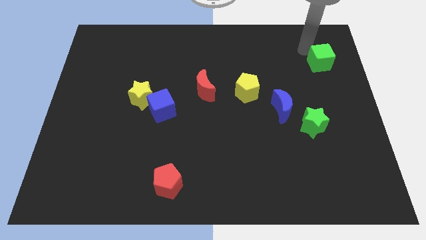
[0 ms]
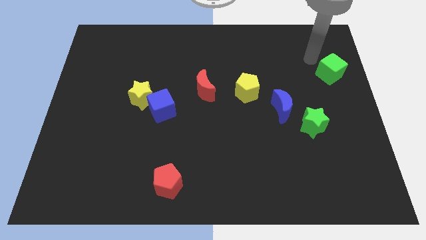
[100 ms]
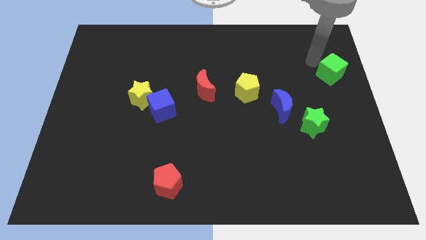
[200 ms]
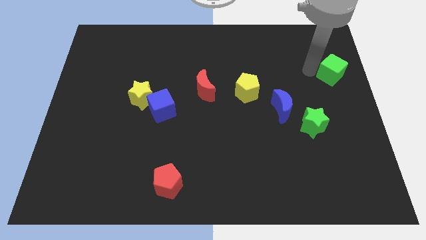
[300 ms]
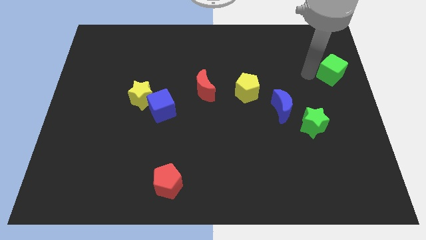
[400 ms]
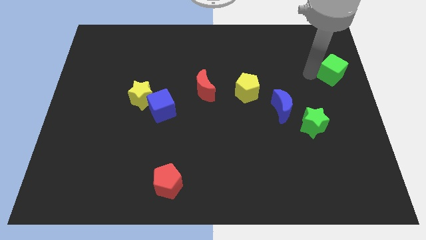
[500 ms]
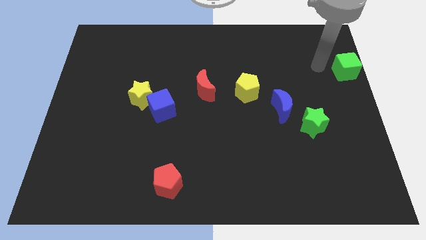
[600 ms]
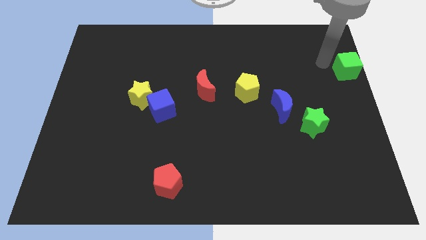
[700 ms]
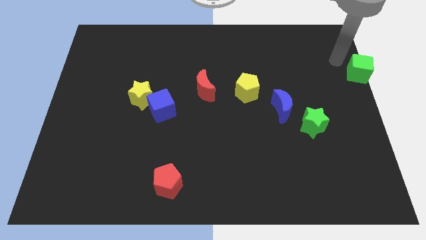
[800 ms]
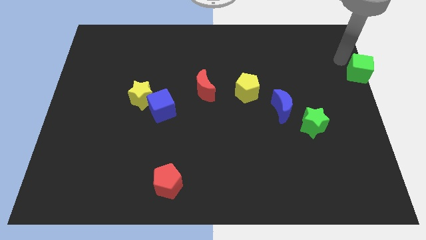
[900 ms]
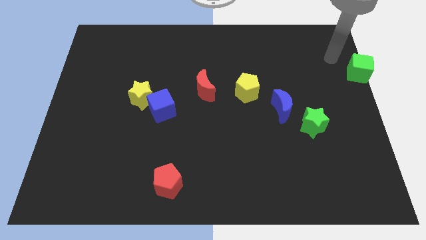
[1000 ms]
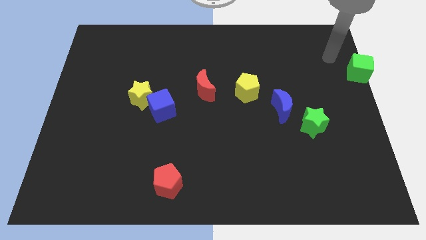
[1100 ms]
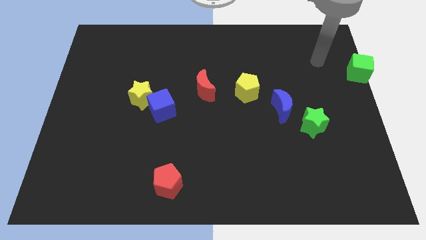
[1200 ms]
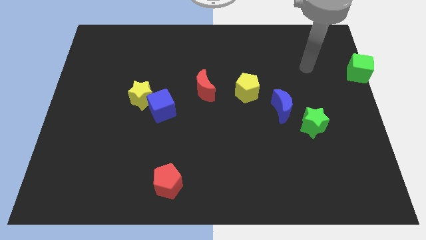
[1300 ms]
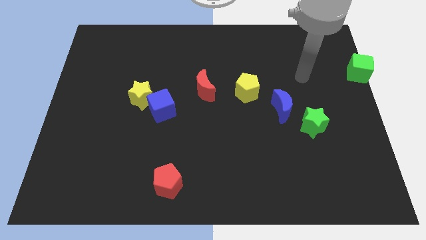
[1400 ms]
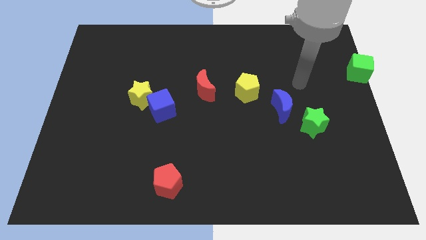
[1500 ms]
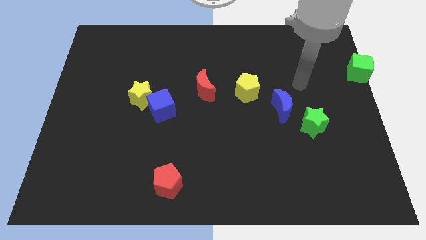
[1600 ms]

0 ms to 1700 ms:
move the green cube towards the right side of the board

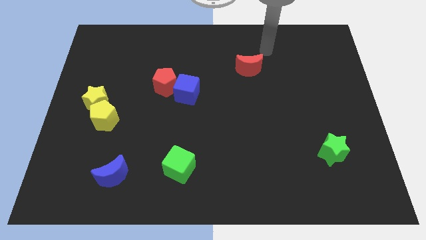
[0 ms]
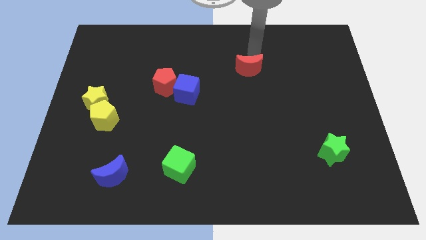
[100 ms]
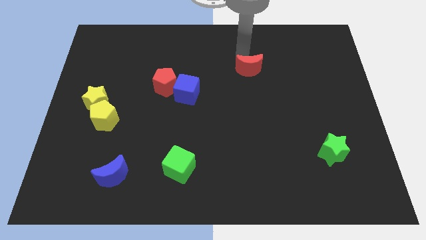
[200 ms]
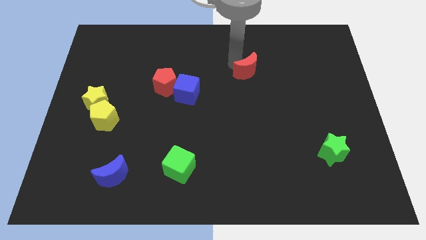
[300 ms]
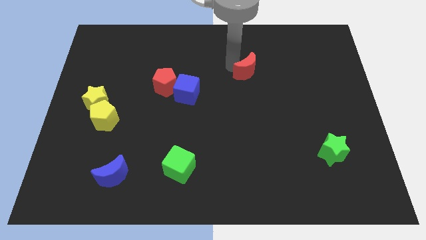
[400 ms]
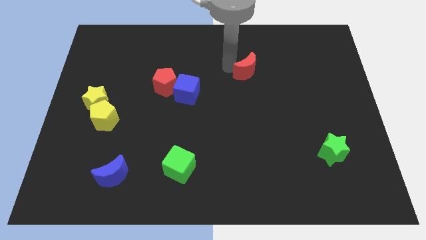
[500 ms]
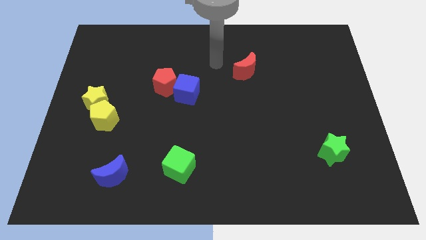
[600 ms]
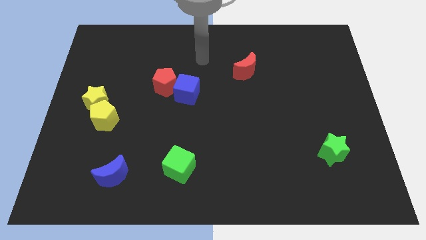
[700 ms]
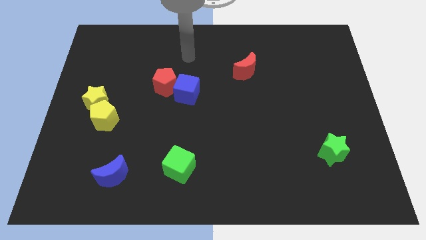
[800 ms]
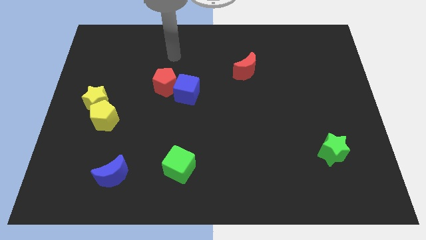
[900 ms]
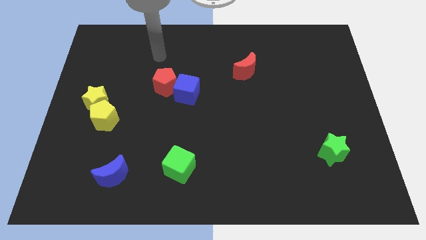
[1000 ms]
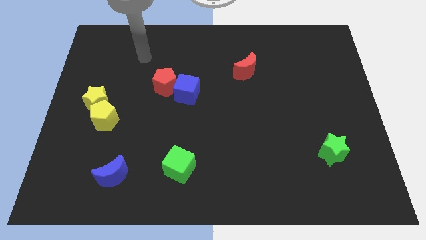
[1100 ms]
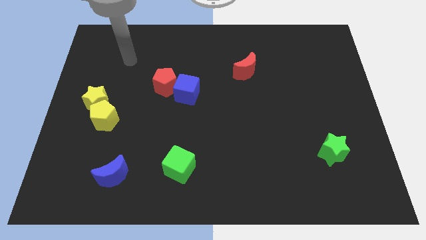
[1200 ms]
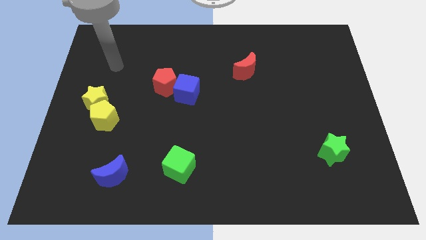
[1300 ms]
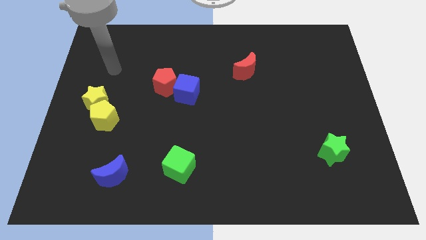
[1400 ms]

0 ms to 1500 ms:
move your arm to the left of red pentagon

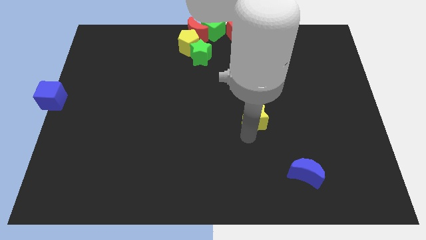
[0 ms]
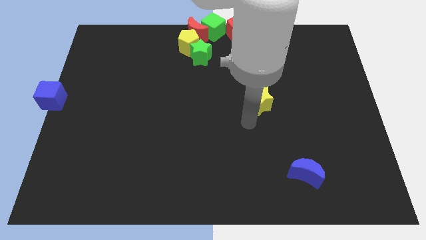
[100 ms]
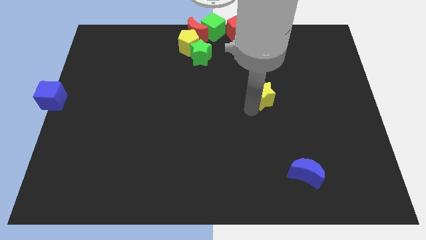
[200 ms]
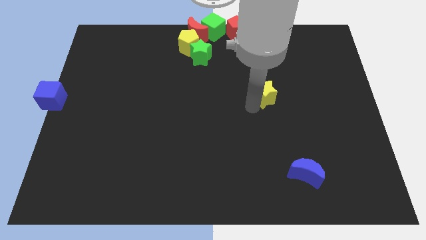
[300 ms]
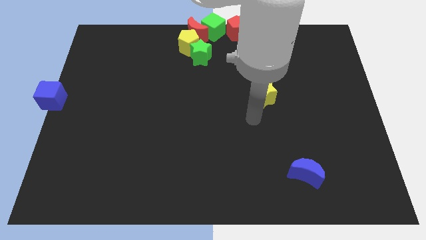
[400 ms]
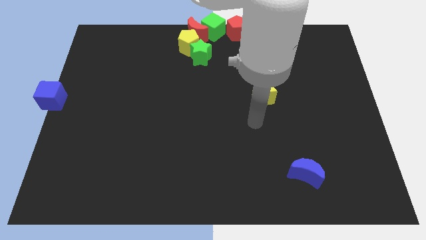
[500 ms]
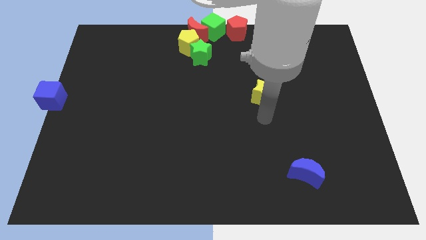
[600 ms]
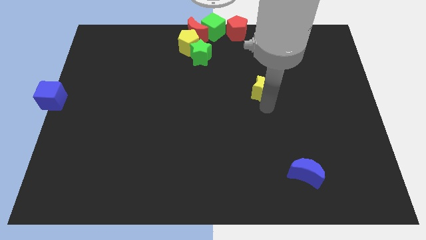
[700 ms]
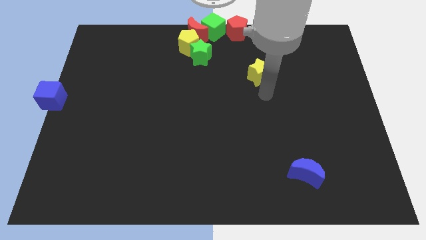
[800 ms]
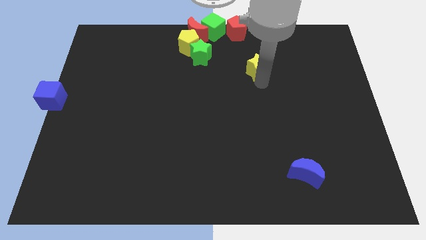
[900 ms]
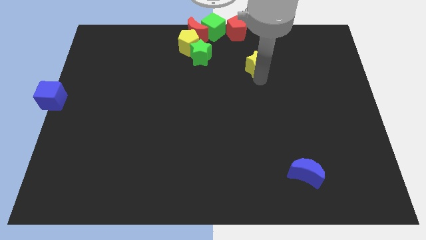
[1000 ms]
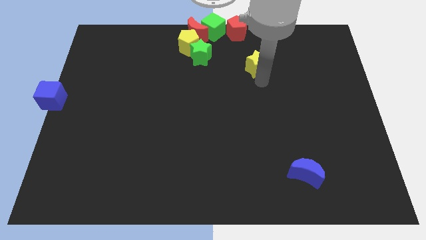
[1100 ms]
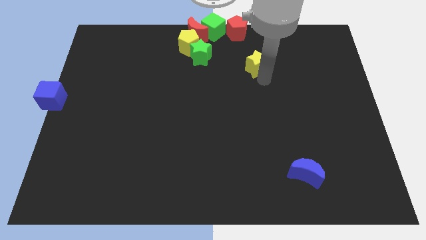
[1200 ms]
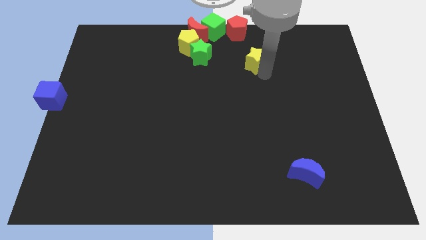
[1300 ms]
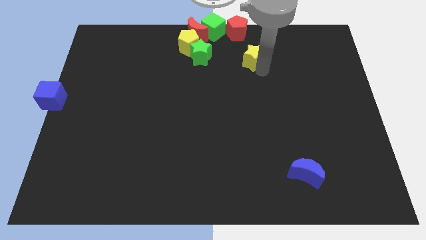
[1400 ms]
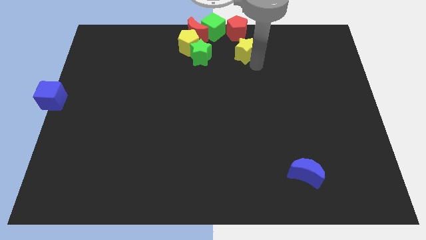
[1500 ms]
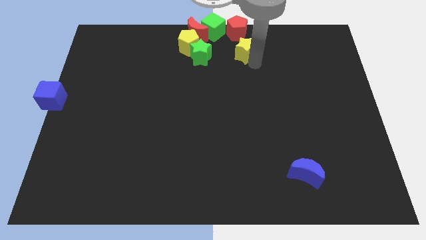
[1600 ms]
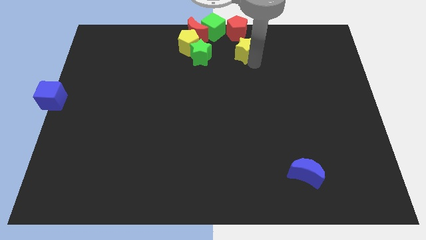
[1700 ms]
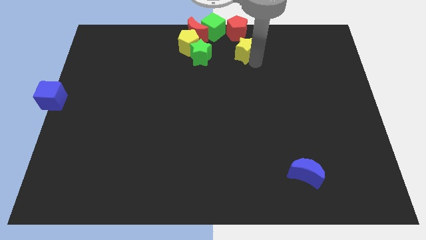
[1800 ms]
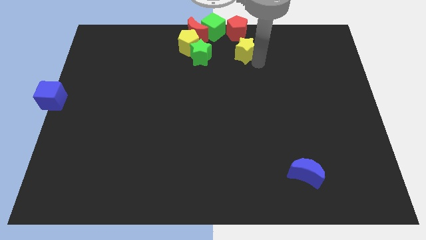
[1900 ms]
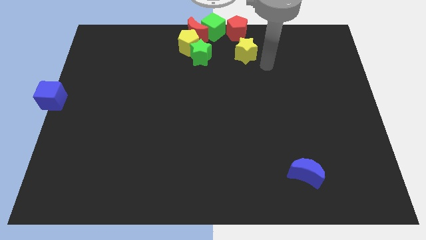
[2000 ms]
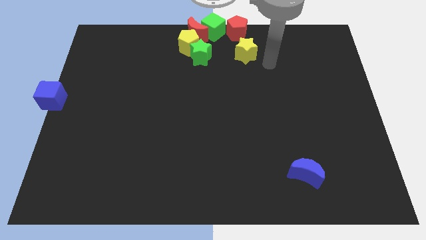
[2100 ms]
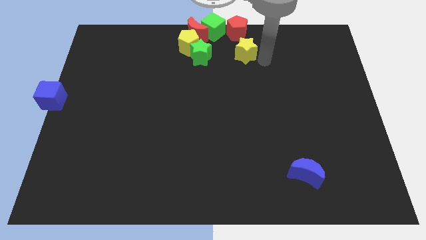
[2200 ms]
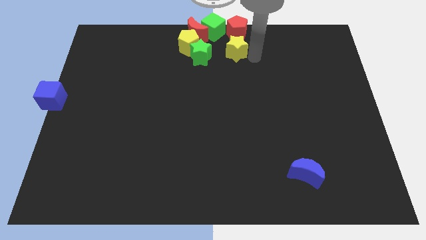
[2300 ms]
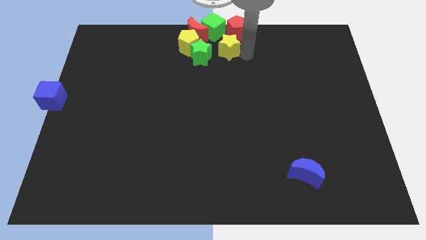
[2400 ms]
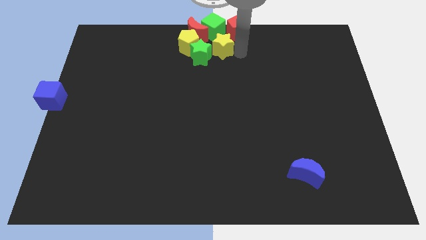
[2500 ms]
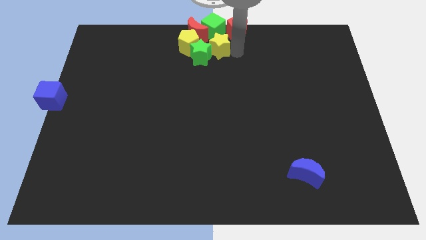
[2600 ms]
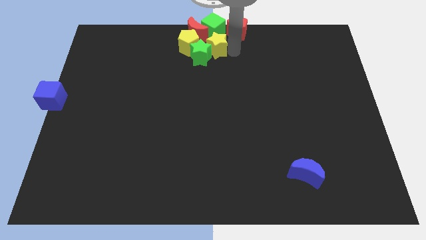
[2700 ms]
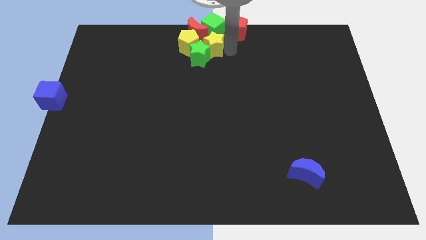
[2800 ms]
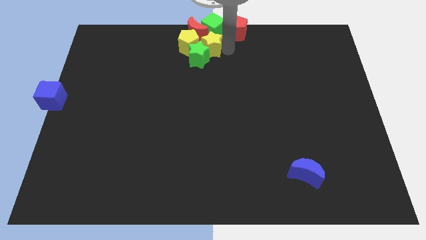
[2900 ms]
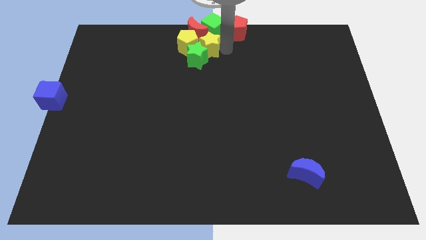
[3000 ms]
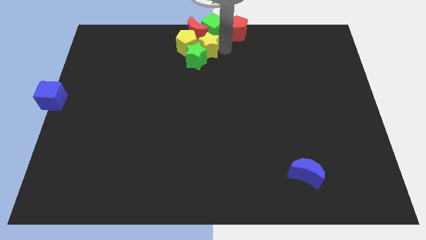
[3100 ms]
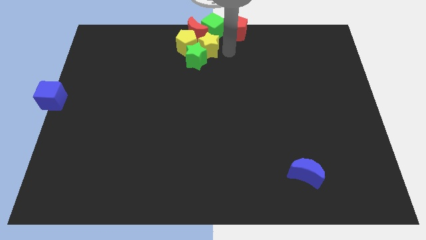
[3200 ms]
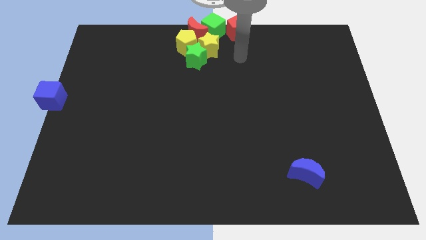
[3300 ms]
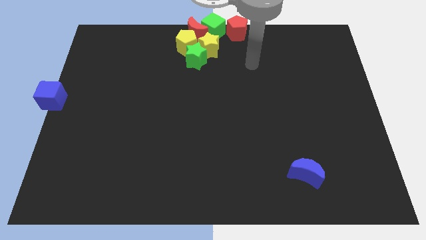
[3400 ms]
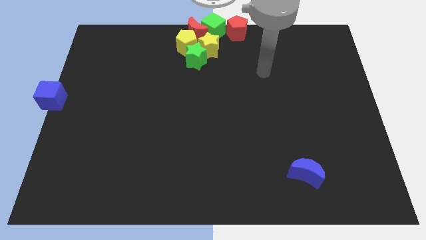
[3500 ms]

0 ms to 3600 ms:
move the yellow star into the group of blocks at the top

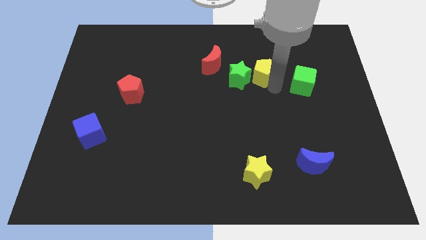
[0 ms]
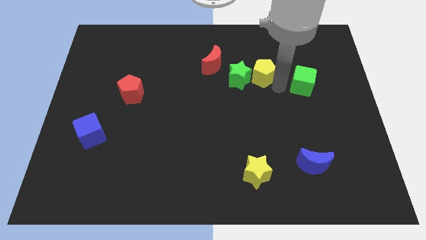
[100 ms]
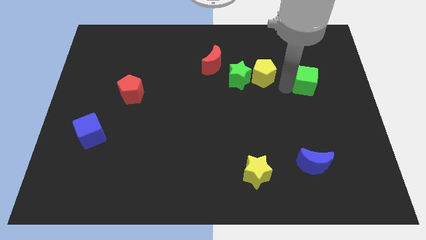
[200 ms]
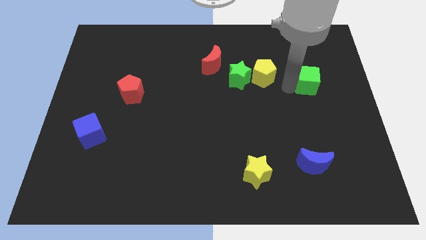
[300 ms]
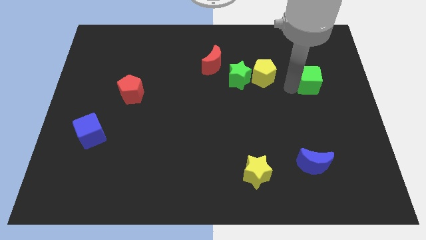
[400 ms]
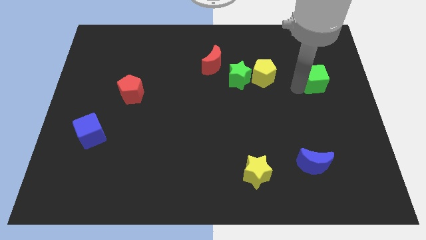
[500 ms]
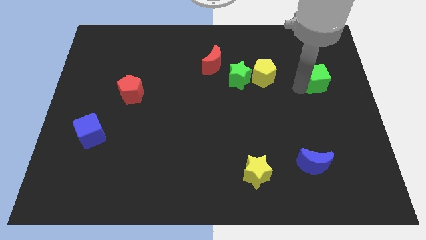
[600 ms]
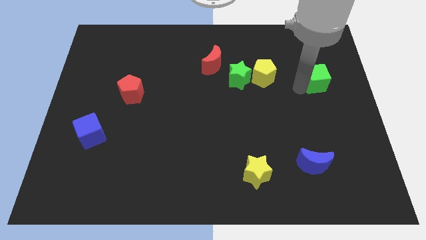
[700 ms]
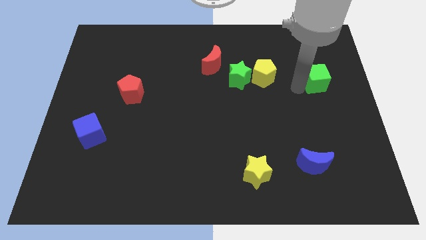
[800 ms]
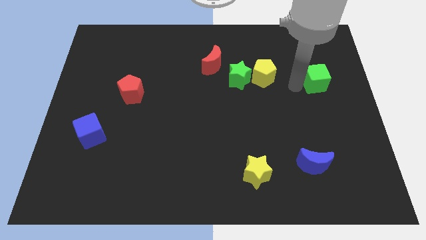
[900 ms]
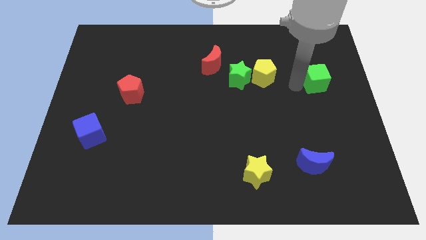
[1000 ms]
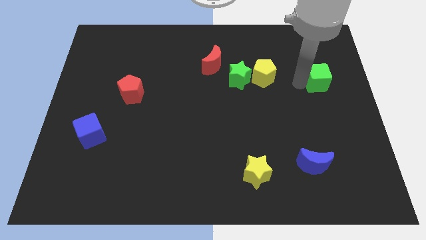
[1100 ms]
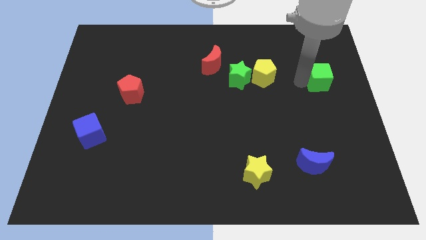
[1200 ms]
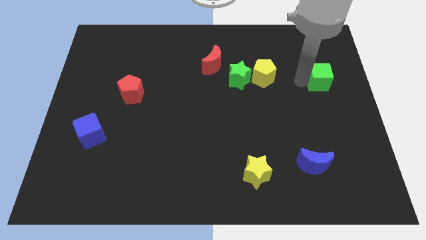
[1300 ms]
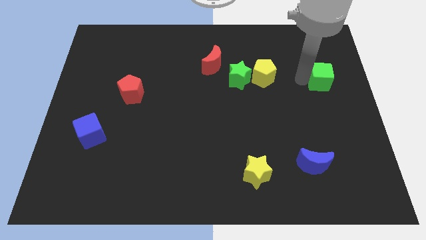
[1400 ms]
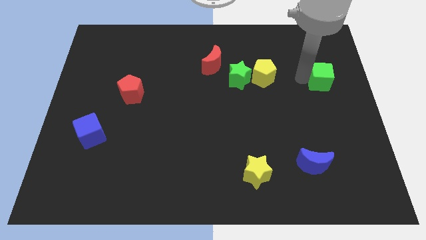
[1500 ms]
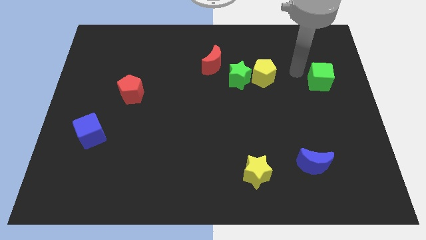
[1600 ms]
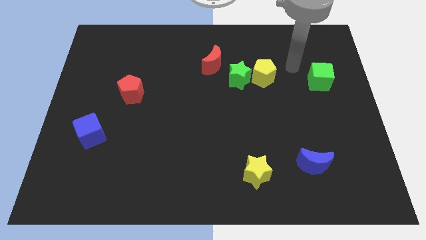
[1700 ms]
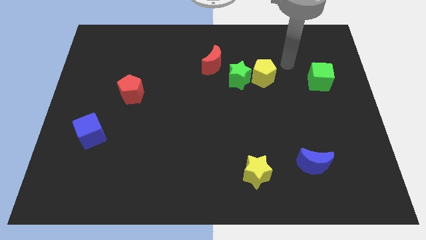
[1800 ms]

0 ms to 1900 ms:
push the green cube to the right side of the yellow pentagon

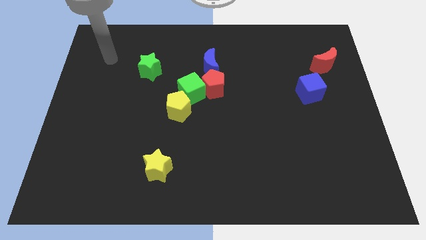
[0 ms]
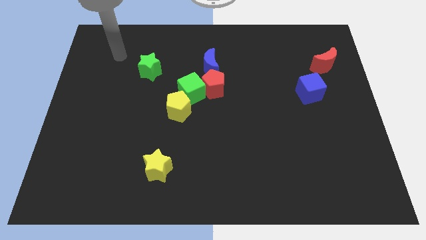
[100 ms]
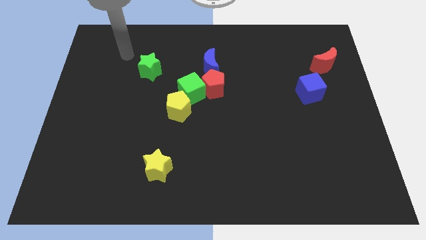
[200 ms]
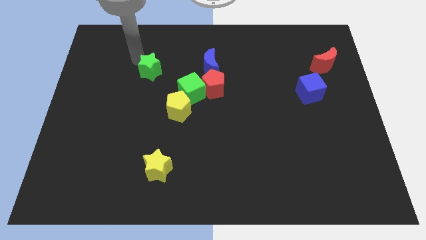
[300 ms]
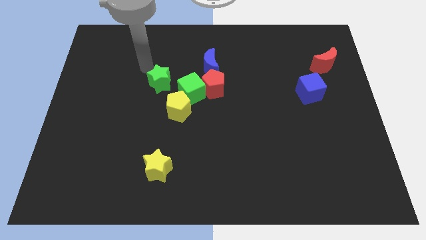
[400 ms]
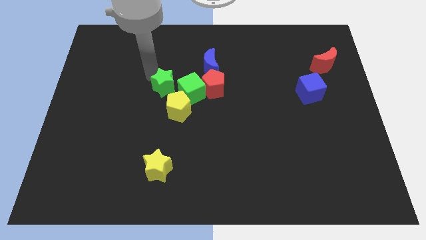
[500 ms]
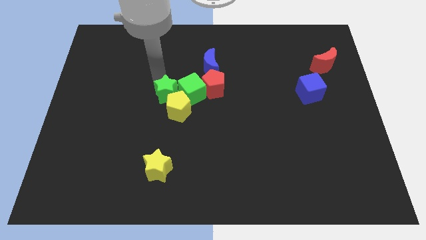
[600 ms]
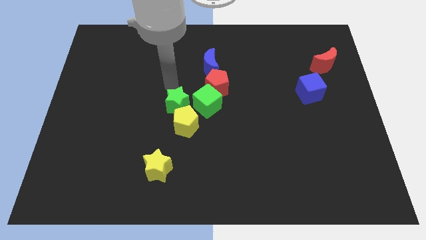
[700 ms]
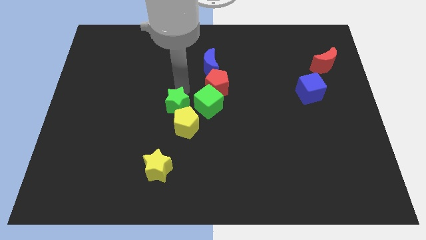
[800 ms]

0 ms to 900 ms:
push green star in to the yellow pentagon
